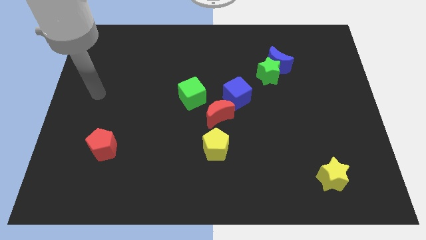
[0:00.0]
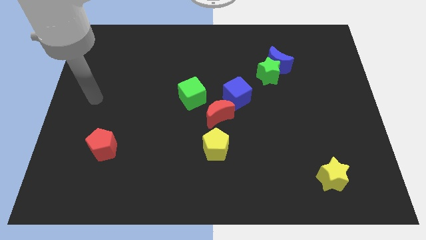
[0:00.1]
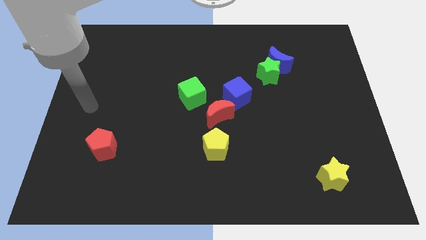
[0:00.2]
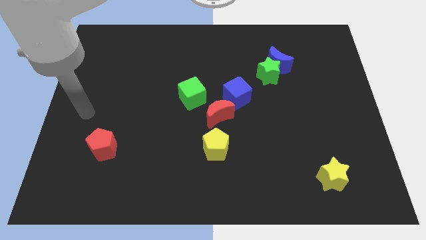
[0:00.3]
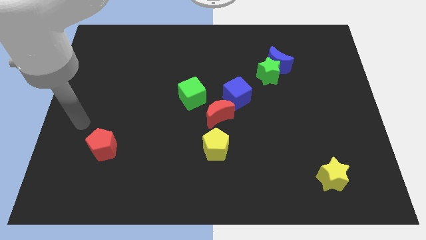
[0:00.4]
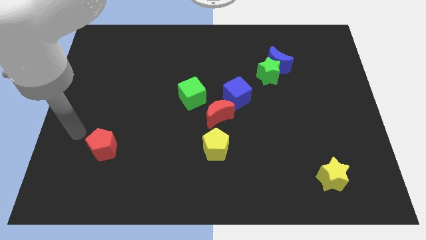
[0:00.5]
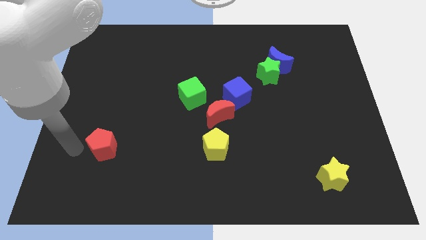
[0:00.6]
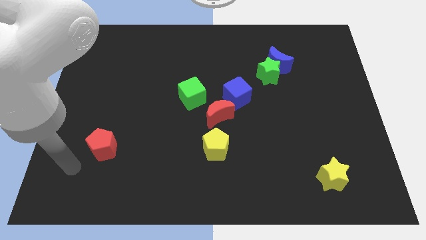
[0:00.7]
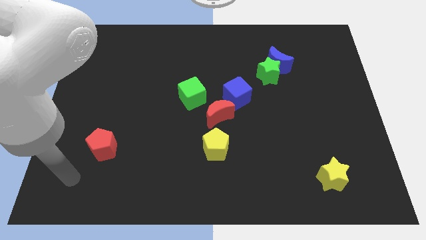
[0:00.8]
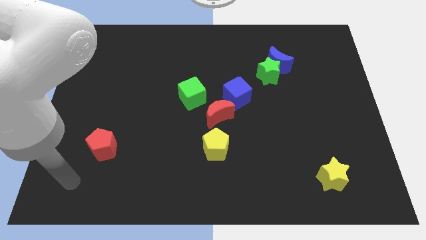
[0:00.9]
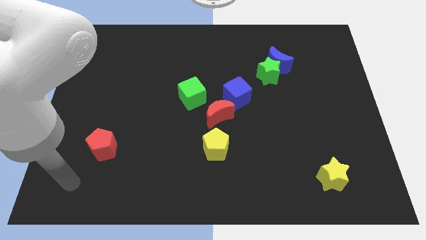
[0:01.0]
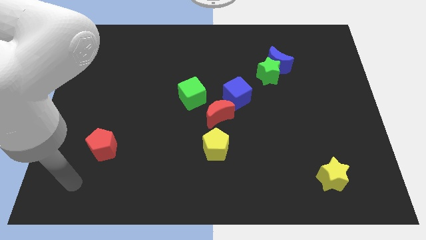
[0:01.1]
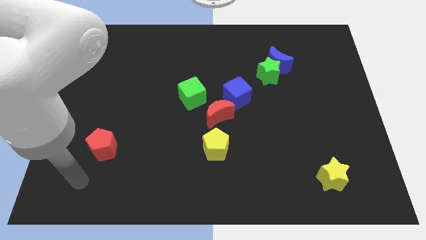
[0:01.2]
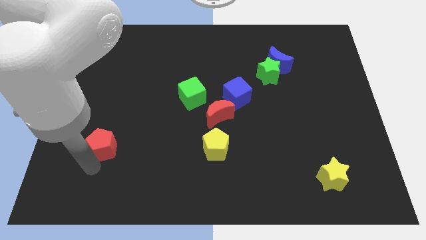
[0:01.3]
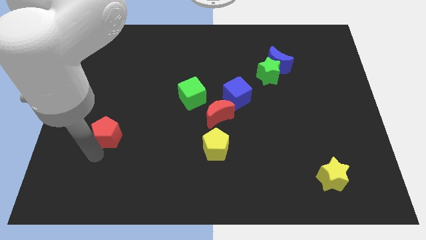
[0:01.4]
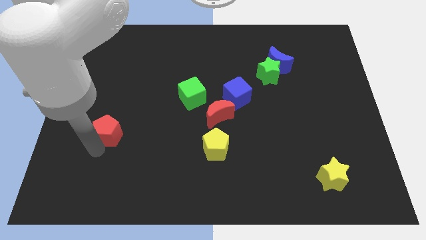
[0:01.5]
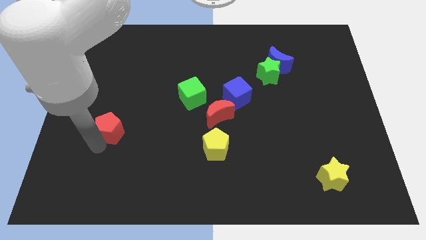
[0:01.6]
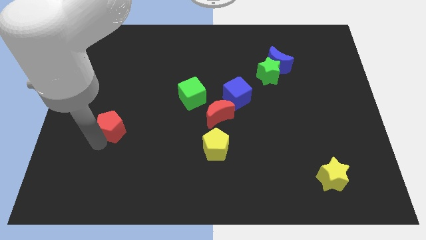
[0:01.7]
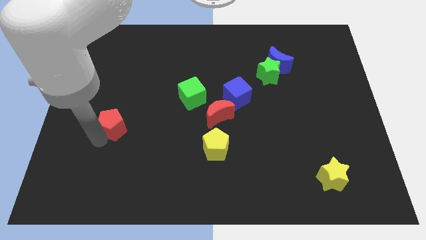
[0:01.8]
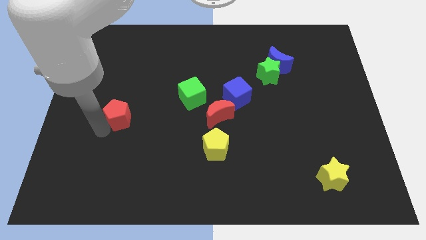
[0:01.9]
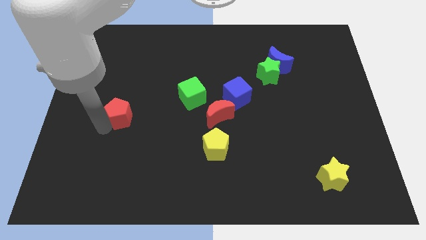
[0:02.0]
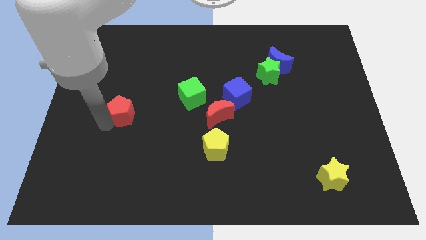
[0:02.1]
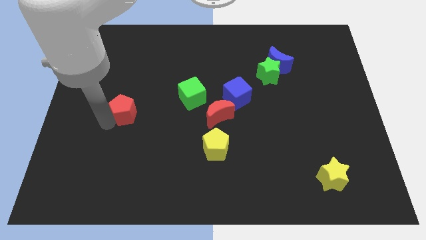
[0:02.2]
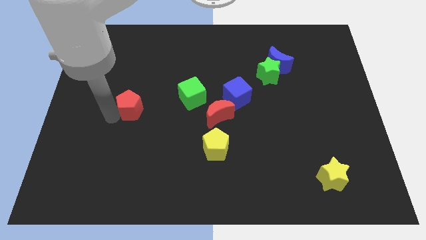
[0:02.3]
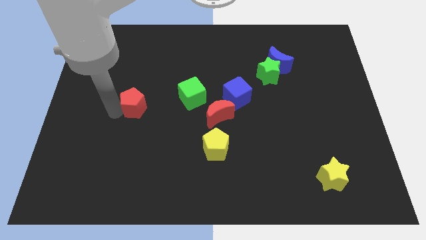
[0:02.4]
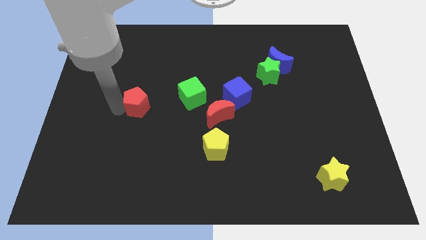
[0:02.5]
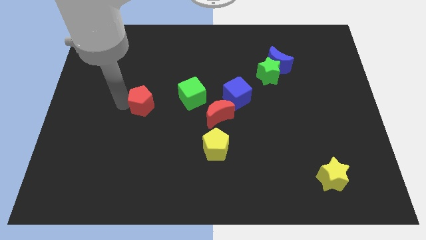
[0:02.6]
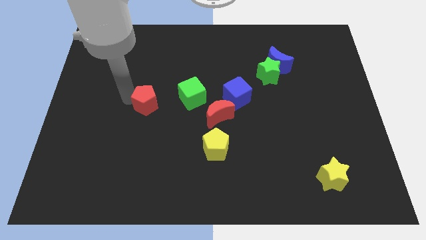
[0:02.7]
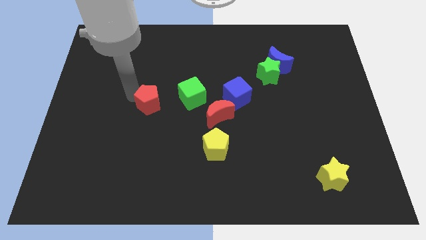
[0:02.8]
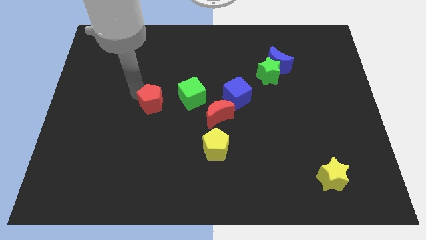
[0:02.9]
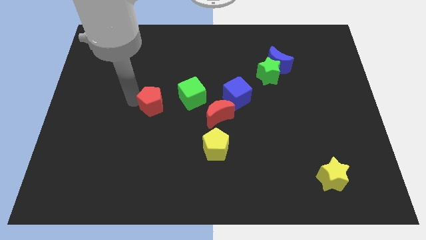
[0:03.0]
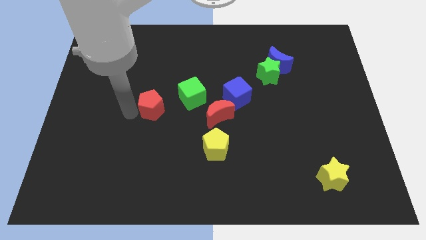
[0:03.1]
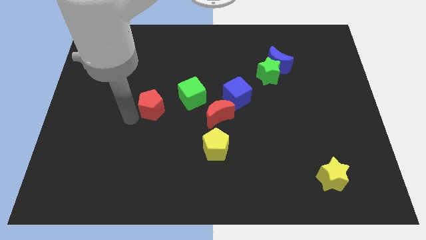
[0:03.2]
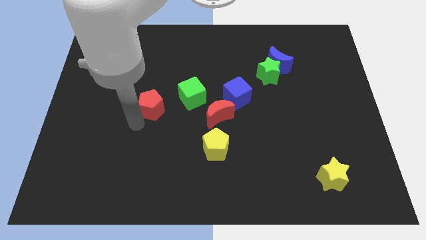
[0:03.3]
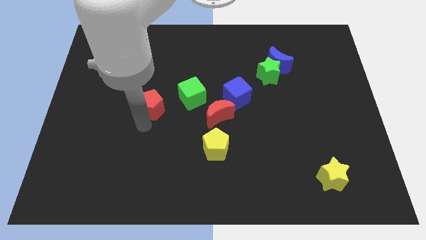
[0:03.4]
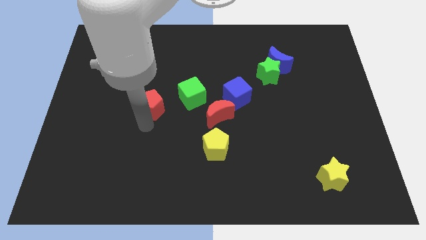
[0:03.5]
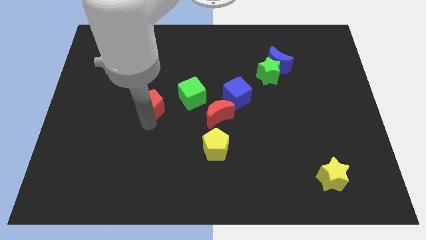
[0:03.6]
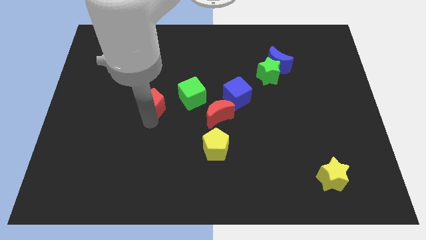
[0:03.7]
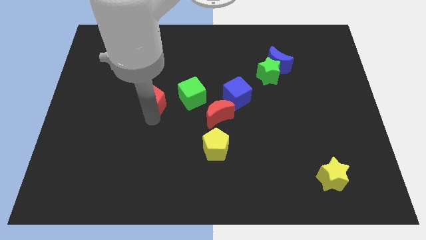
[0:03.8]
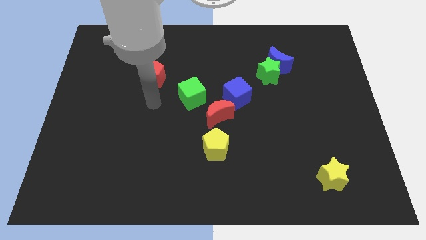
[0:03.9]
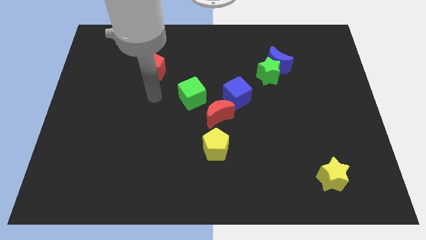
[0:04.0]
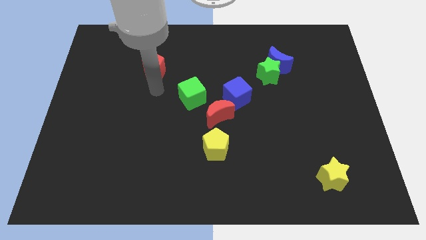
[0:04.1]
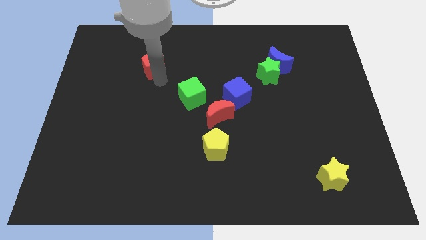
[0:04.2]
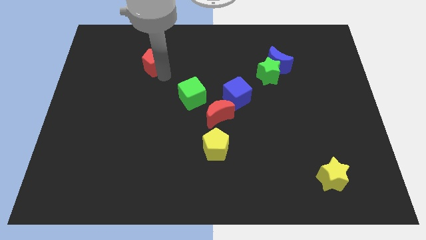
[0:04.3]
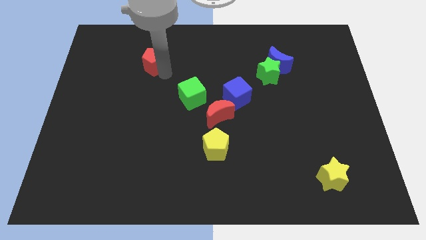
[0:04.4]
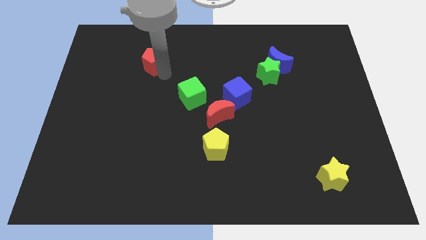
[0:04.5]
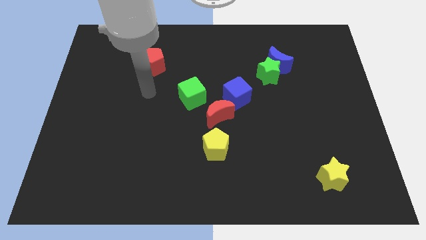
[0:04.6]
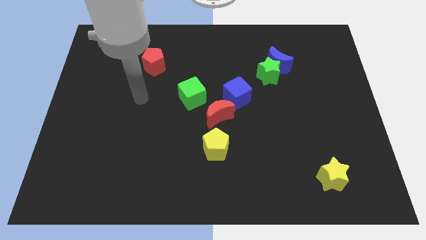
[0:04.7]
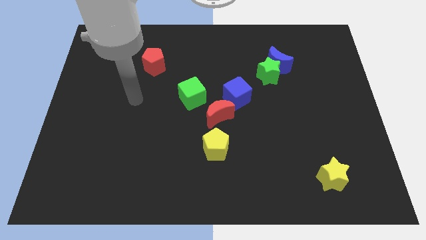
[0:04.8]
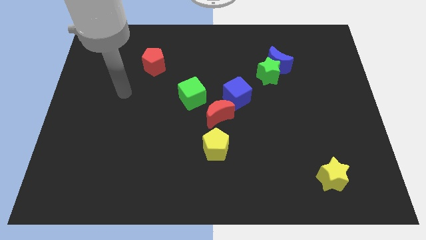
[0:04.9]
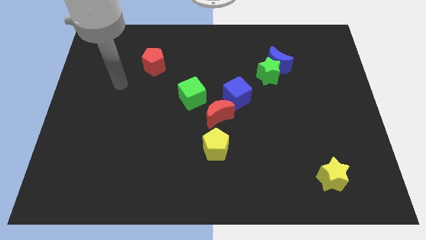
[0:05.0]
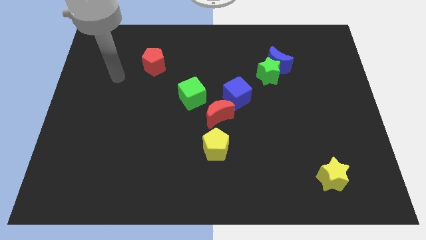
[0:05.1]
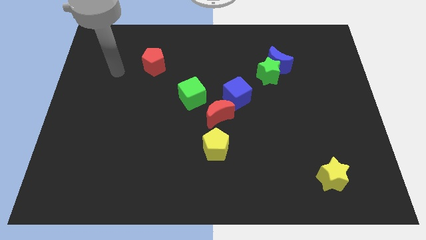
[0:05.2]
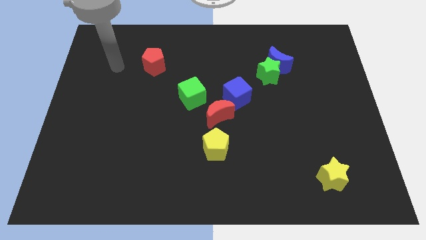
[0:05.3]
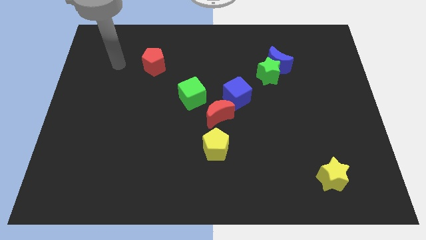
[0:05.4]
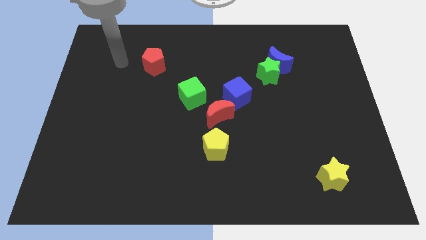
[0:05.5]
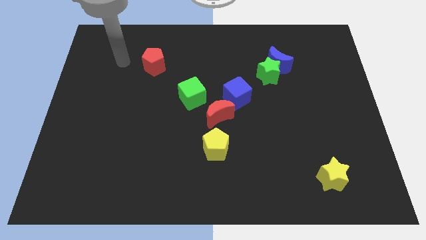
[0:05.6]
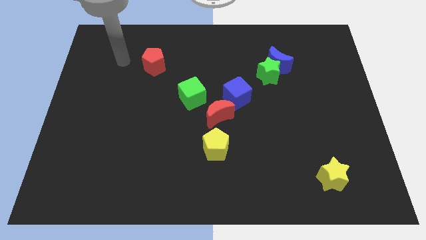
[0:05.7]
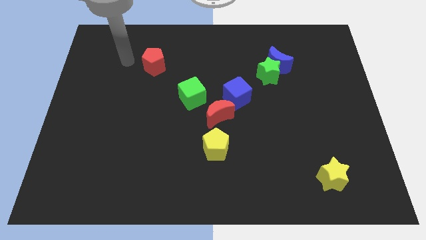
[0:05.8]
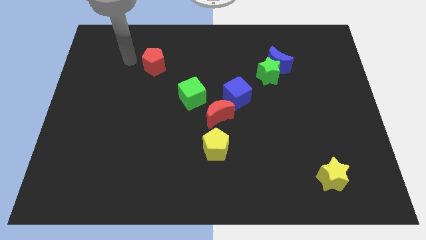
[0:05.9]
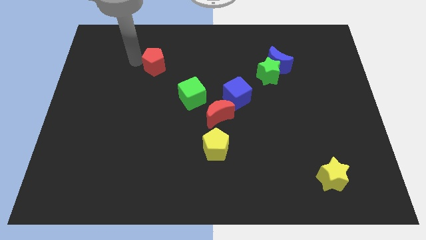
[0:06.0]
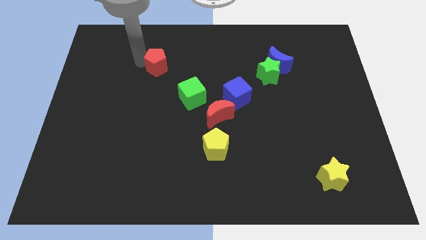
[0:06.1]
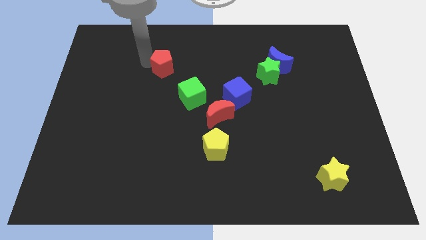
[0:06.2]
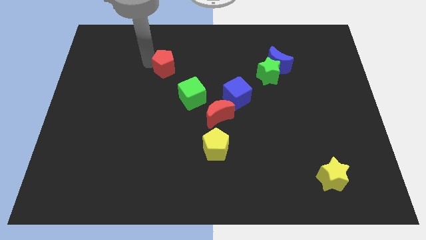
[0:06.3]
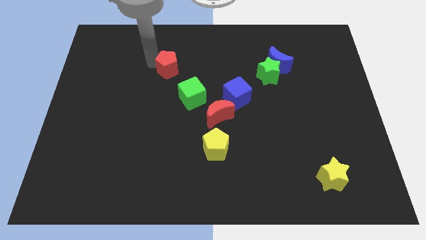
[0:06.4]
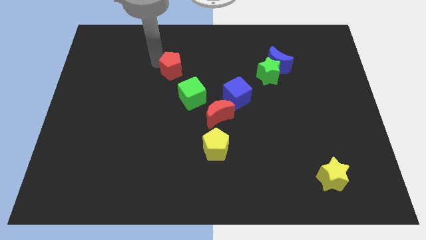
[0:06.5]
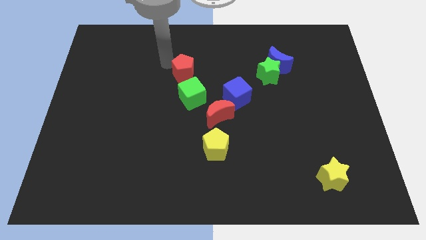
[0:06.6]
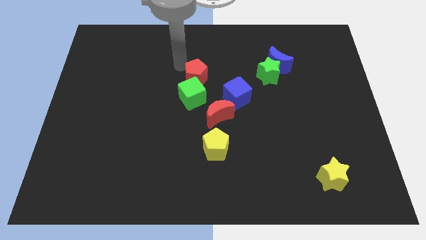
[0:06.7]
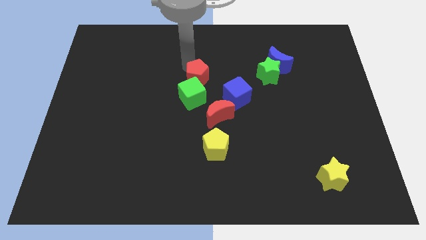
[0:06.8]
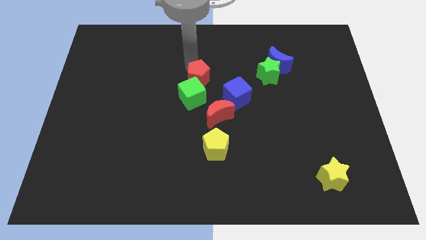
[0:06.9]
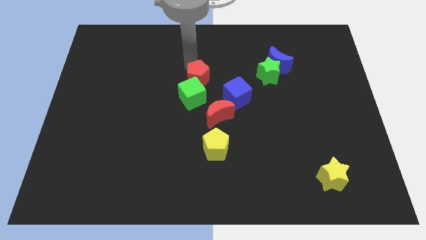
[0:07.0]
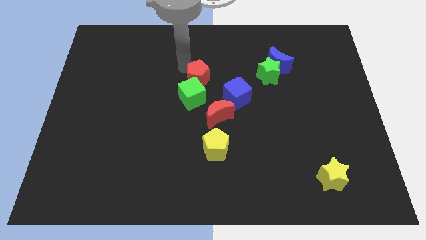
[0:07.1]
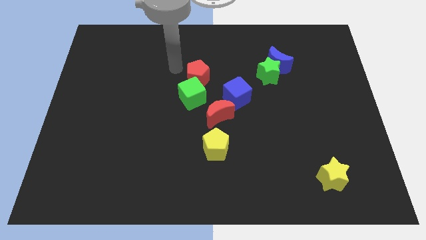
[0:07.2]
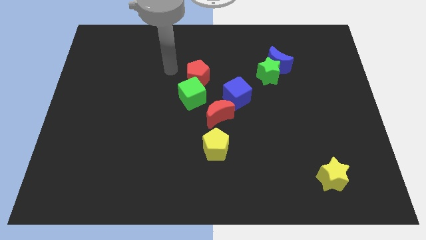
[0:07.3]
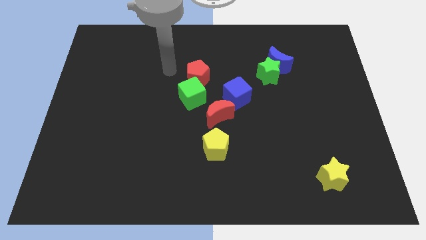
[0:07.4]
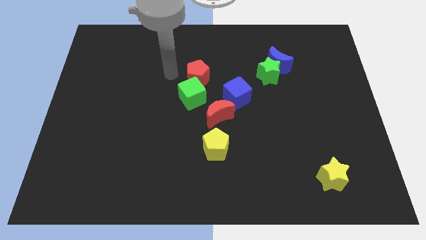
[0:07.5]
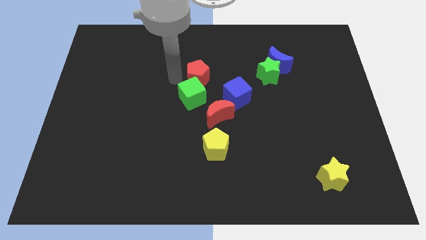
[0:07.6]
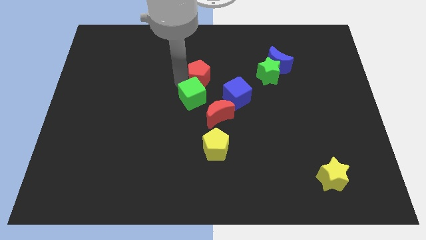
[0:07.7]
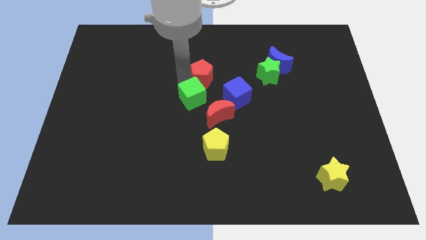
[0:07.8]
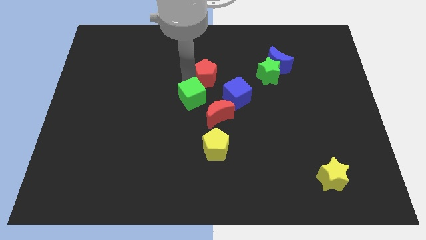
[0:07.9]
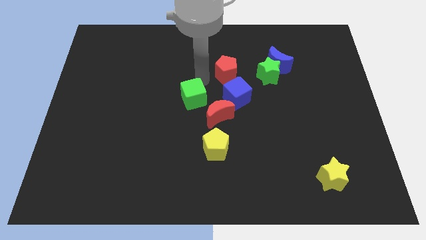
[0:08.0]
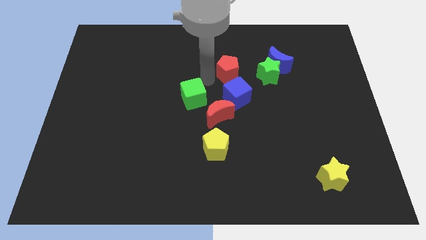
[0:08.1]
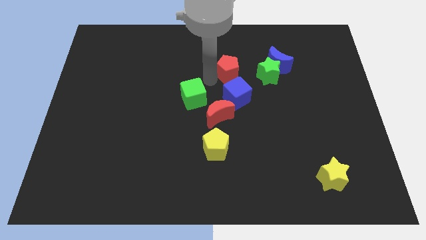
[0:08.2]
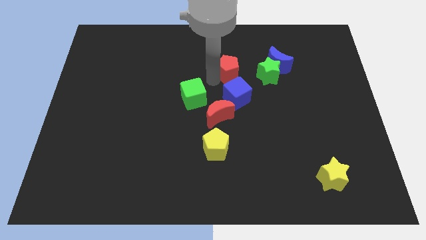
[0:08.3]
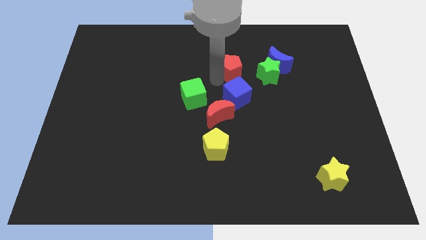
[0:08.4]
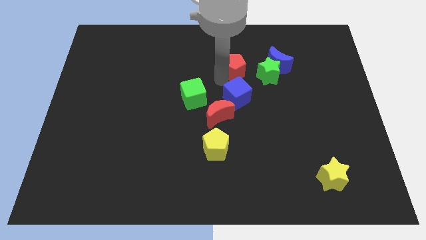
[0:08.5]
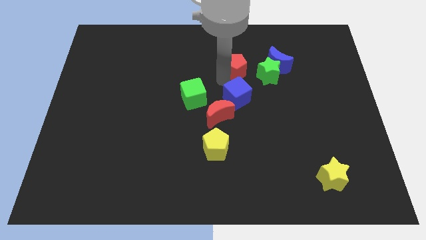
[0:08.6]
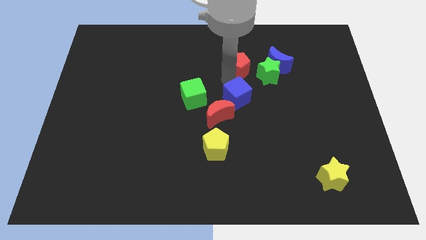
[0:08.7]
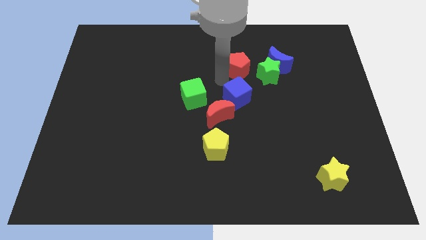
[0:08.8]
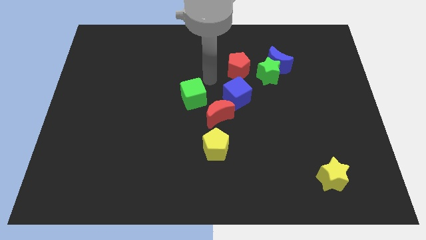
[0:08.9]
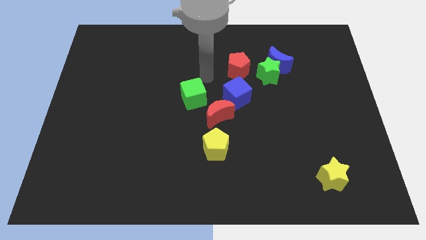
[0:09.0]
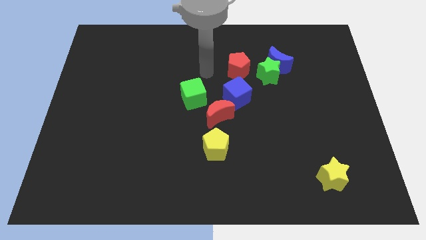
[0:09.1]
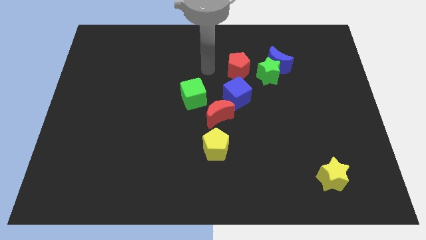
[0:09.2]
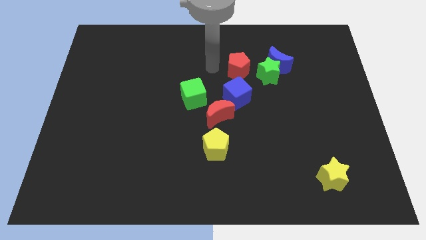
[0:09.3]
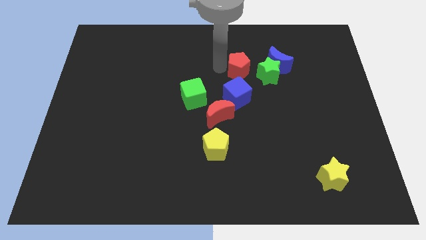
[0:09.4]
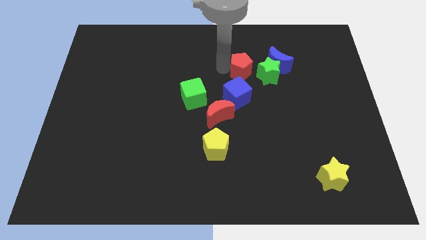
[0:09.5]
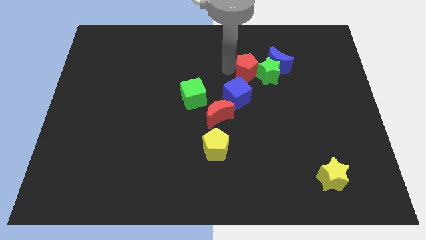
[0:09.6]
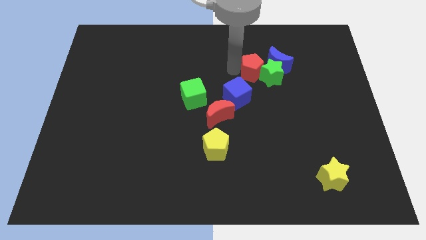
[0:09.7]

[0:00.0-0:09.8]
push the red pentagon to the green star
